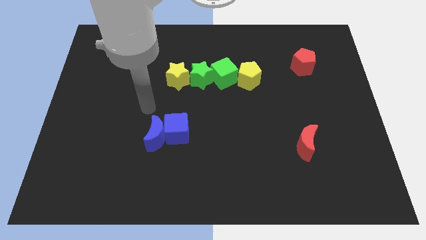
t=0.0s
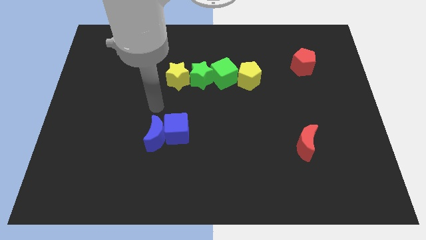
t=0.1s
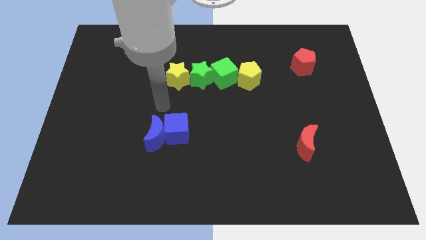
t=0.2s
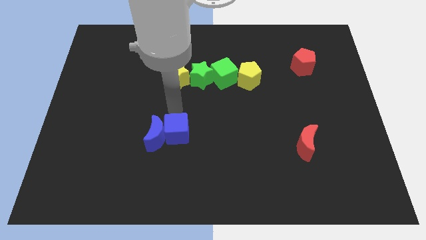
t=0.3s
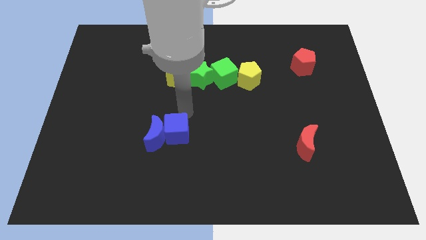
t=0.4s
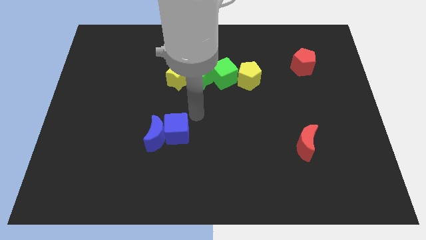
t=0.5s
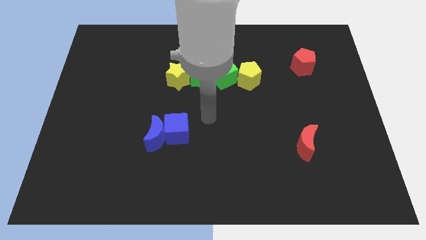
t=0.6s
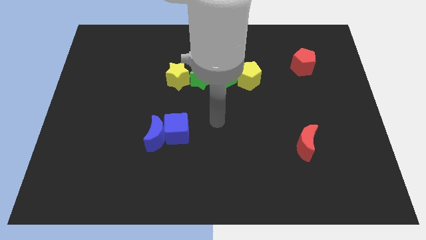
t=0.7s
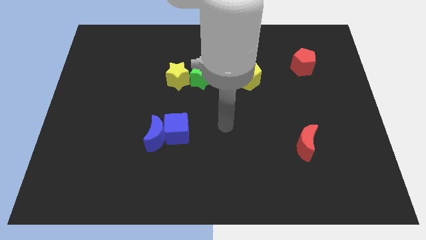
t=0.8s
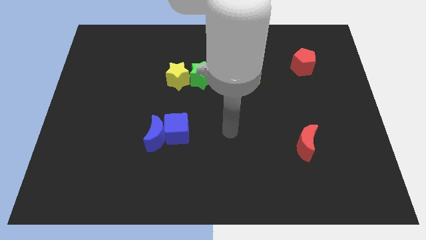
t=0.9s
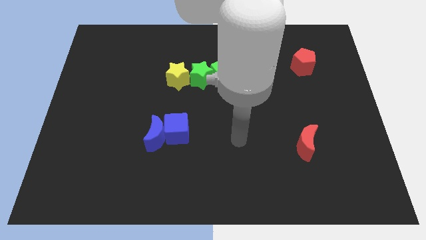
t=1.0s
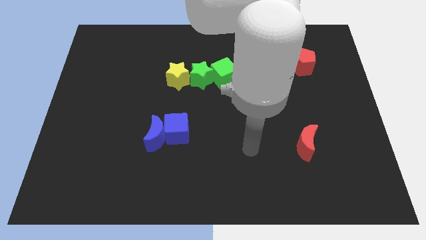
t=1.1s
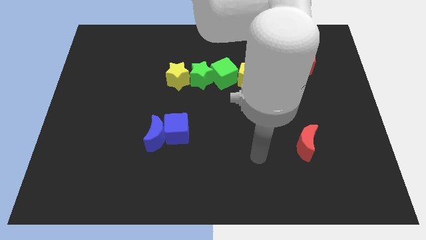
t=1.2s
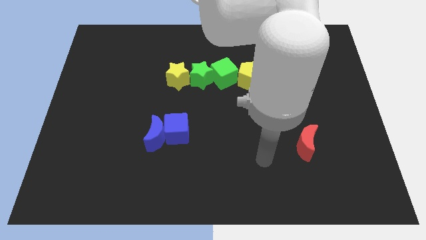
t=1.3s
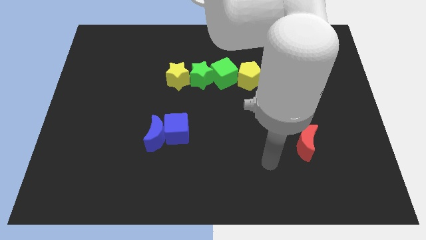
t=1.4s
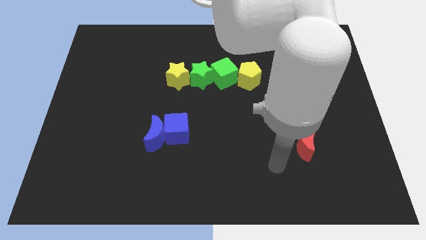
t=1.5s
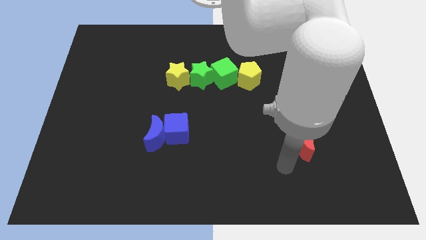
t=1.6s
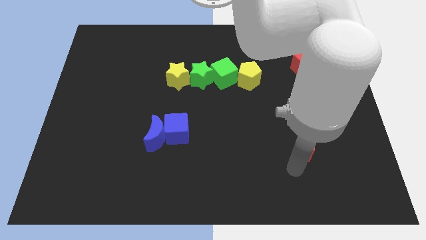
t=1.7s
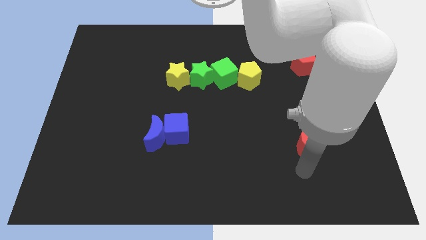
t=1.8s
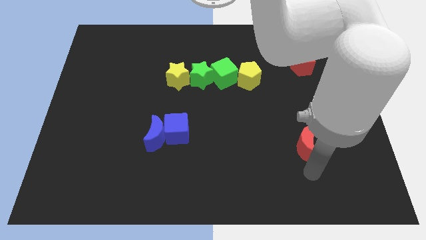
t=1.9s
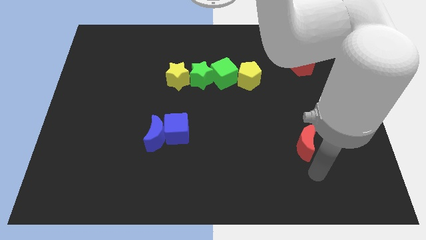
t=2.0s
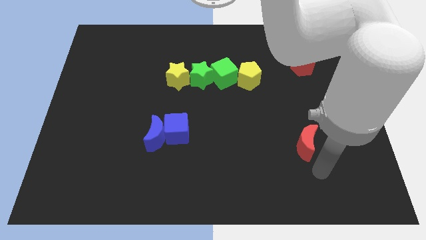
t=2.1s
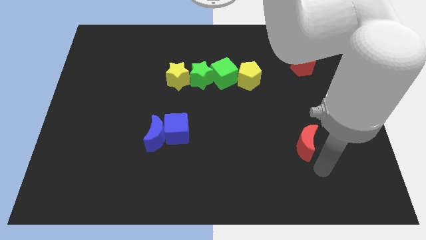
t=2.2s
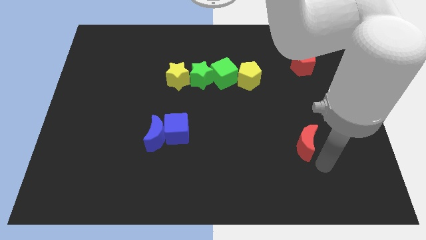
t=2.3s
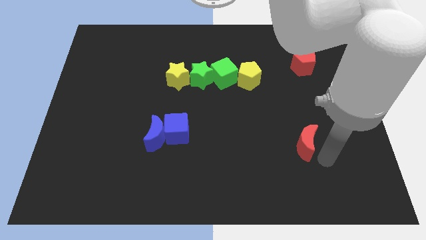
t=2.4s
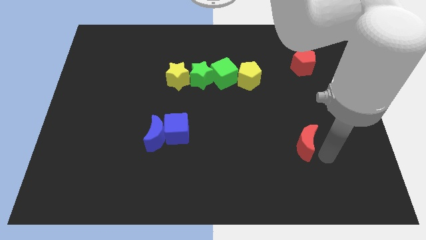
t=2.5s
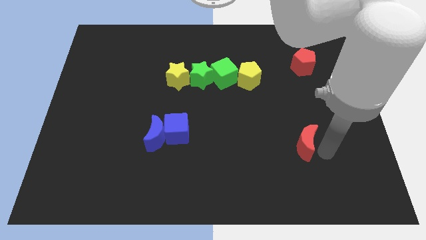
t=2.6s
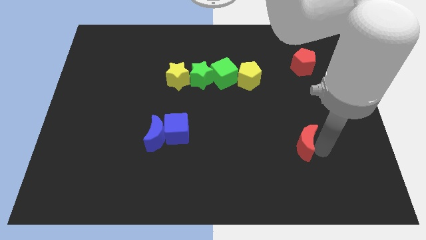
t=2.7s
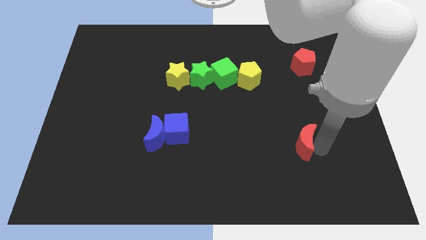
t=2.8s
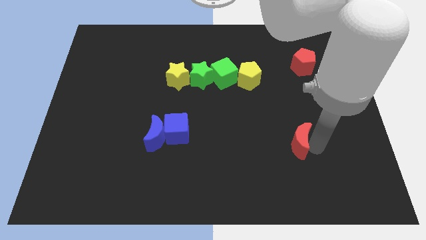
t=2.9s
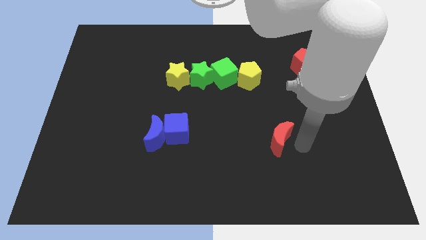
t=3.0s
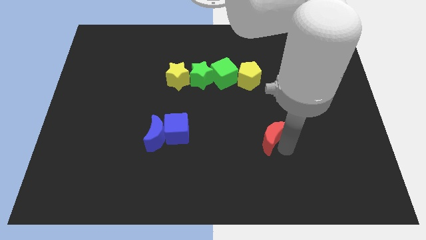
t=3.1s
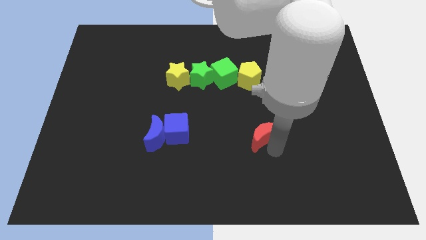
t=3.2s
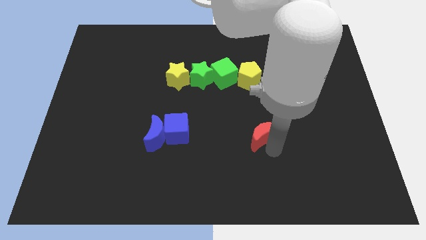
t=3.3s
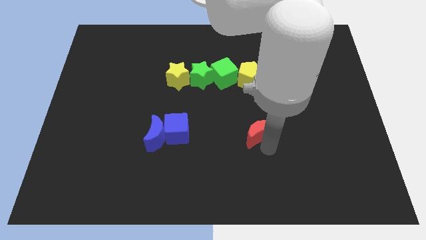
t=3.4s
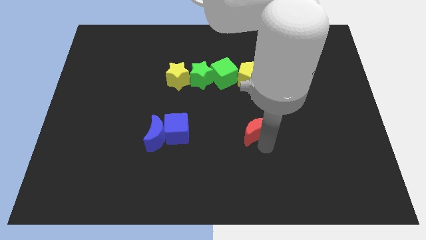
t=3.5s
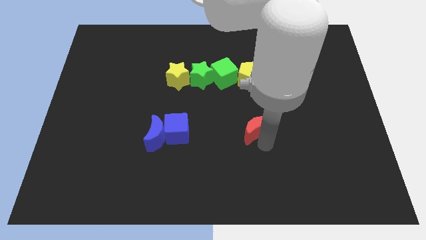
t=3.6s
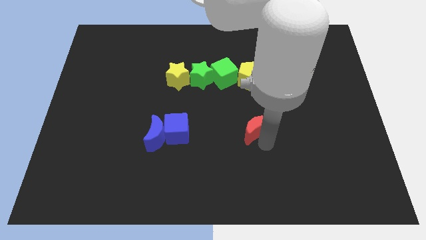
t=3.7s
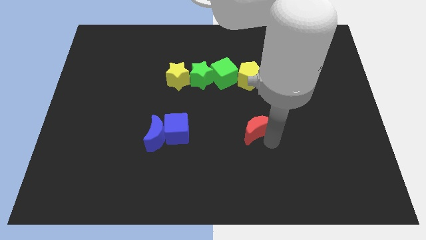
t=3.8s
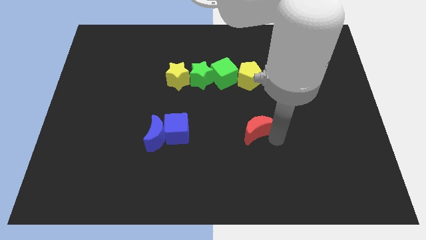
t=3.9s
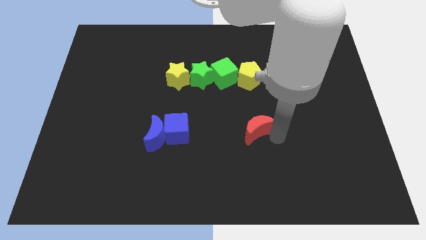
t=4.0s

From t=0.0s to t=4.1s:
slide the red moon towards the blue cube

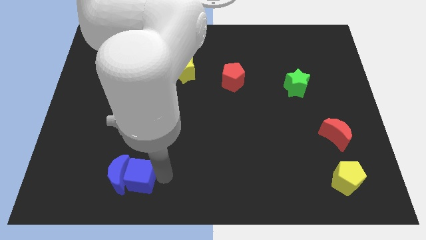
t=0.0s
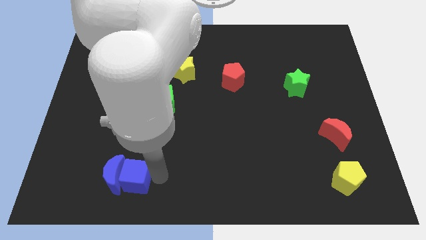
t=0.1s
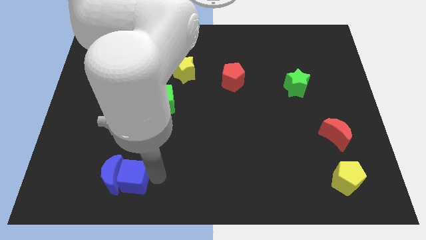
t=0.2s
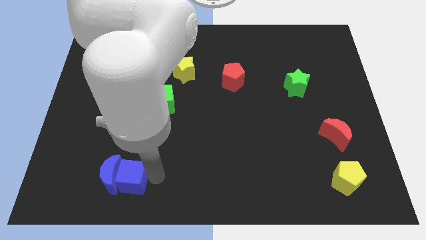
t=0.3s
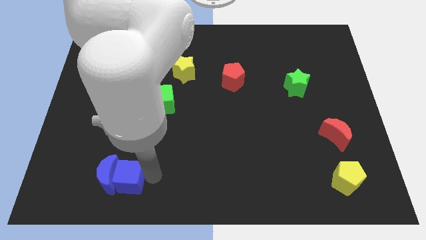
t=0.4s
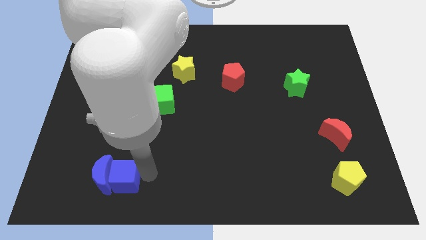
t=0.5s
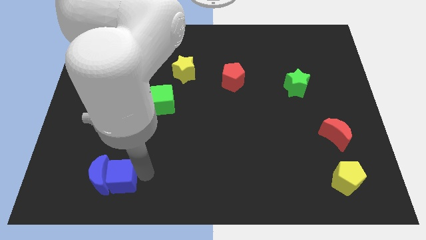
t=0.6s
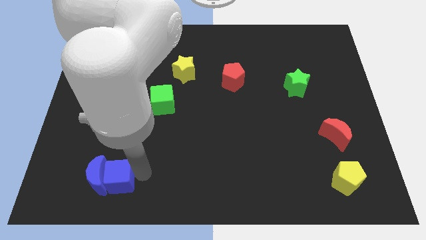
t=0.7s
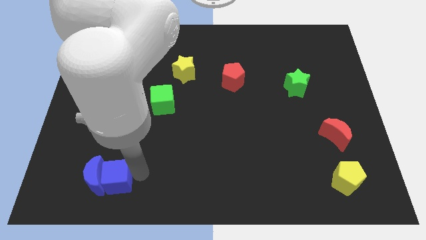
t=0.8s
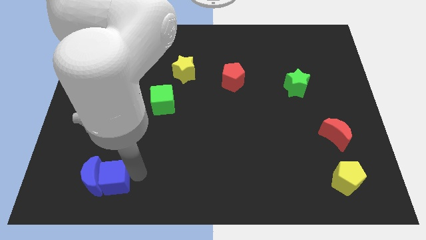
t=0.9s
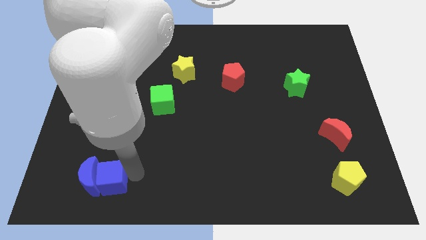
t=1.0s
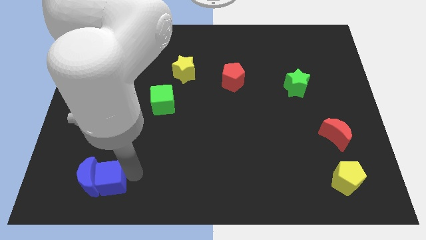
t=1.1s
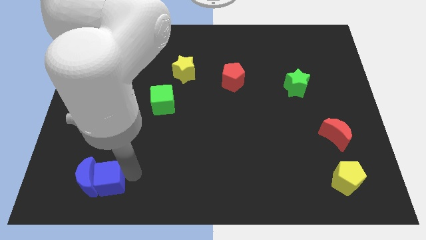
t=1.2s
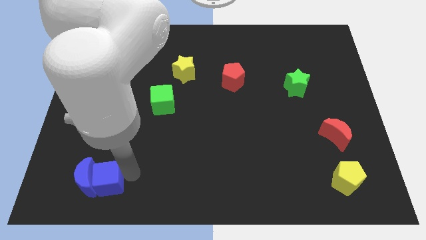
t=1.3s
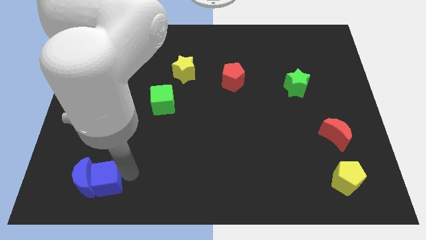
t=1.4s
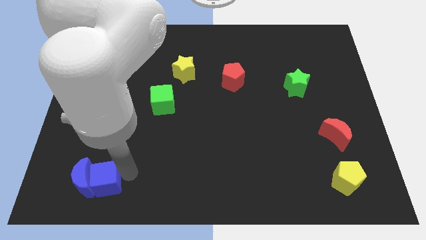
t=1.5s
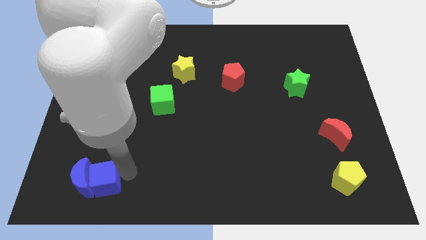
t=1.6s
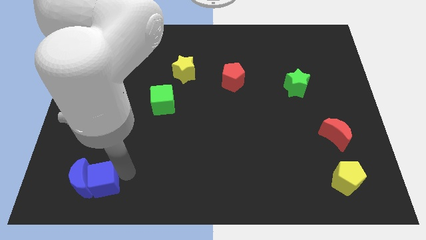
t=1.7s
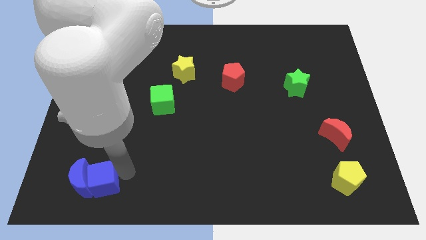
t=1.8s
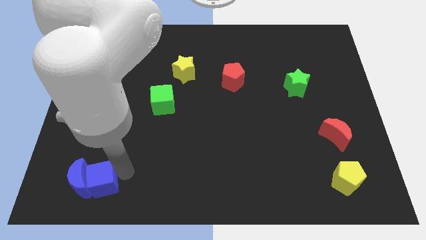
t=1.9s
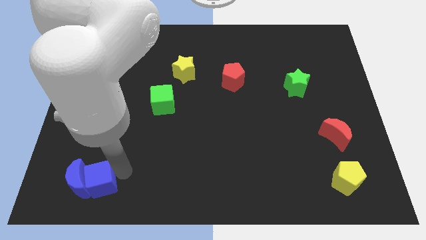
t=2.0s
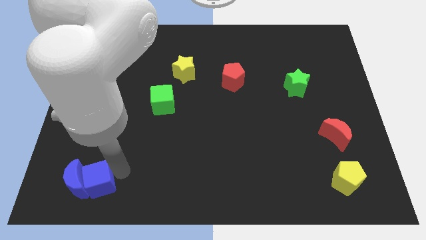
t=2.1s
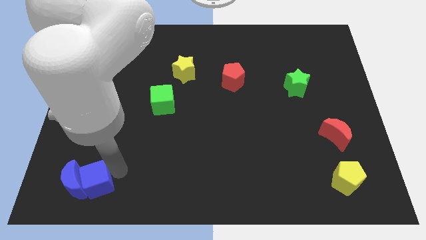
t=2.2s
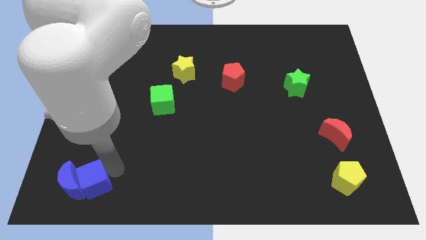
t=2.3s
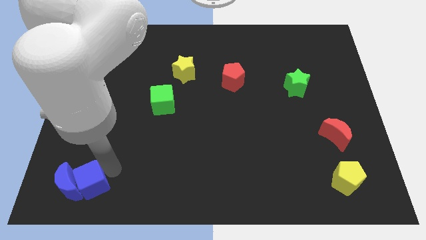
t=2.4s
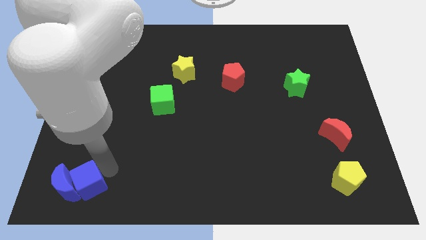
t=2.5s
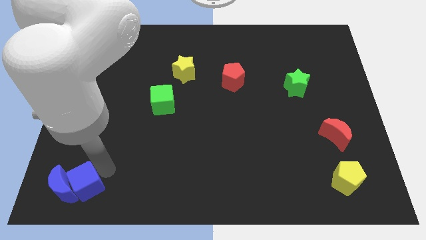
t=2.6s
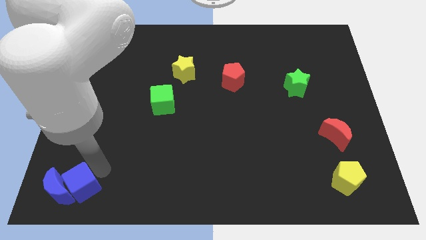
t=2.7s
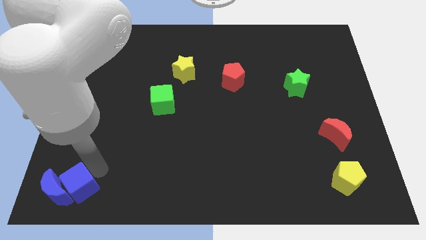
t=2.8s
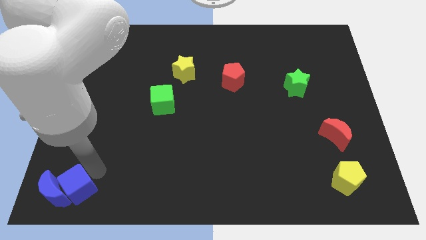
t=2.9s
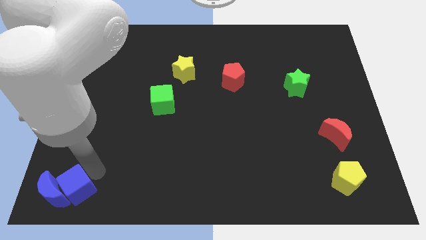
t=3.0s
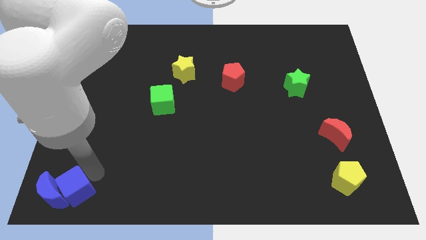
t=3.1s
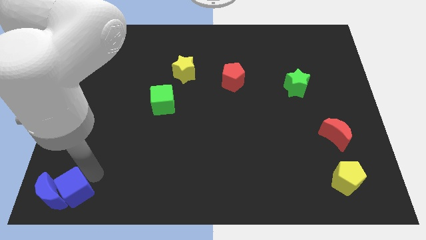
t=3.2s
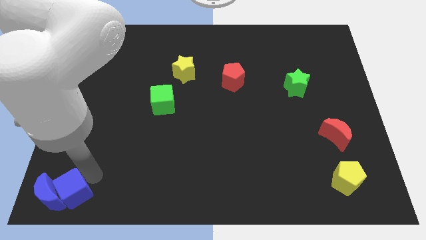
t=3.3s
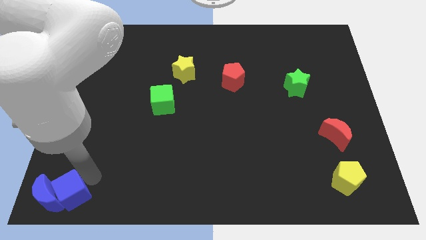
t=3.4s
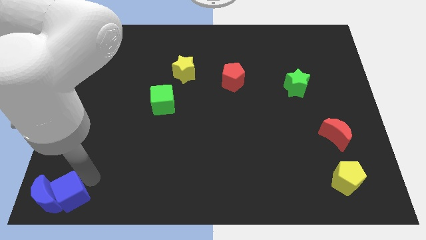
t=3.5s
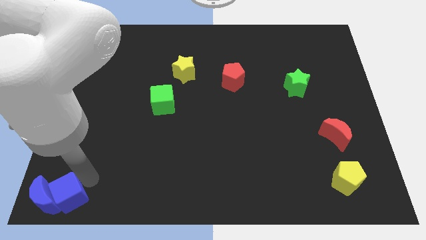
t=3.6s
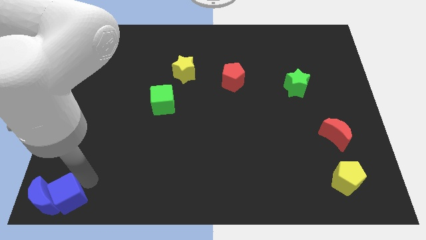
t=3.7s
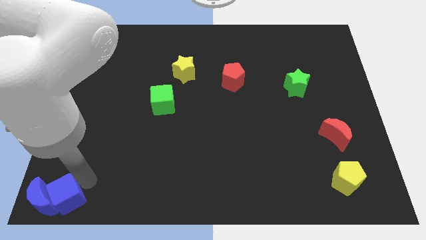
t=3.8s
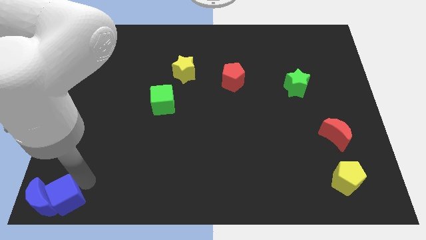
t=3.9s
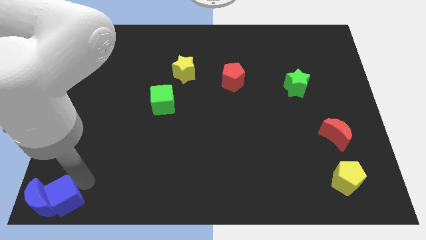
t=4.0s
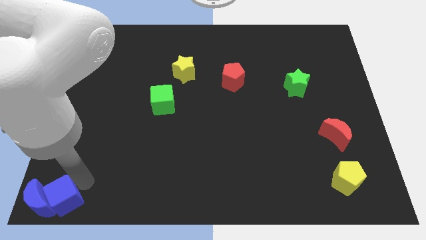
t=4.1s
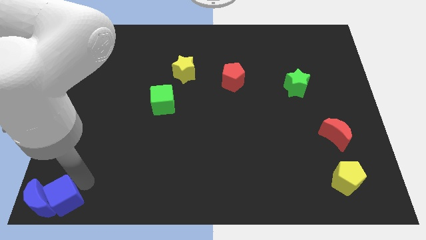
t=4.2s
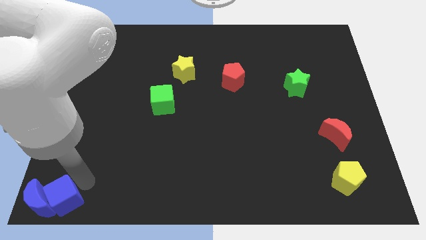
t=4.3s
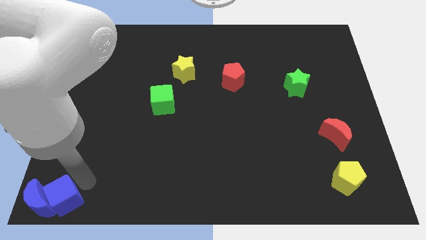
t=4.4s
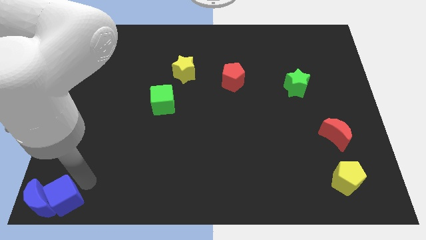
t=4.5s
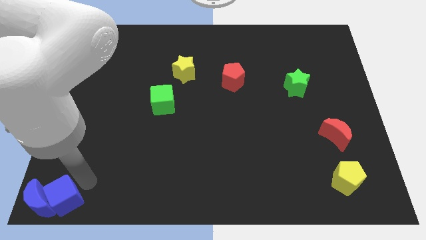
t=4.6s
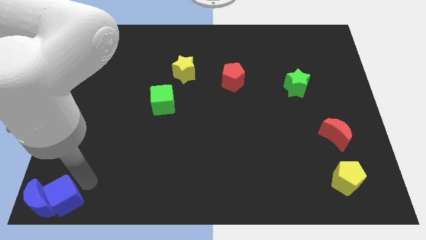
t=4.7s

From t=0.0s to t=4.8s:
push blue blocks to the bottom left corner of the board
